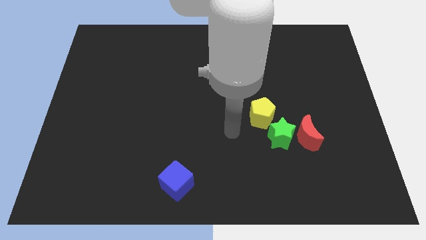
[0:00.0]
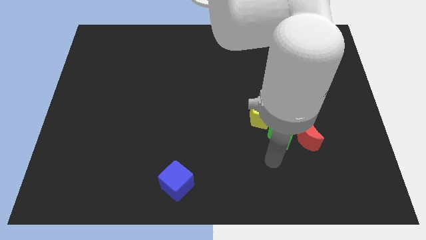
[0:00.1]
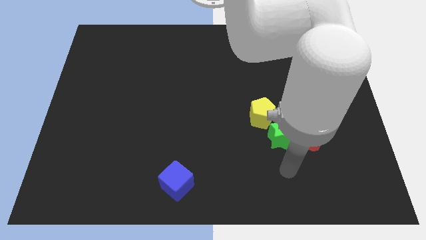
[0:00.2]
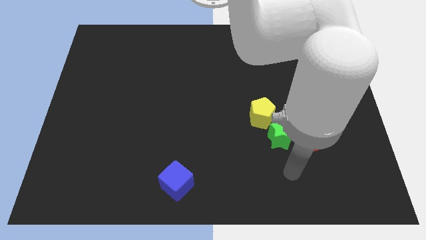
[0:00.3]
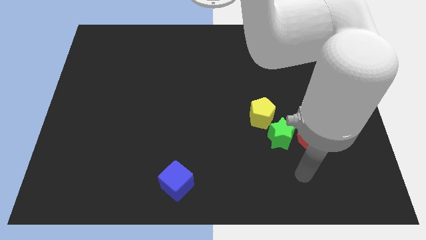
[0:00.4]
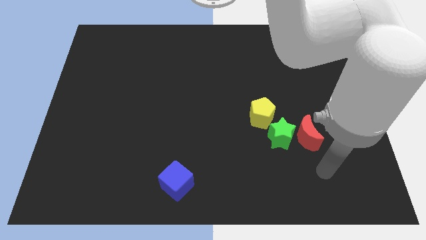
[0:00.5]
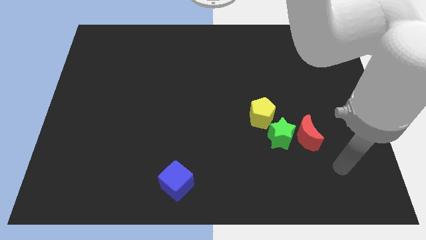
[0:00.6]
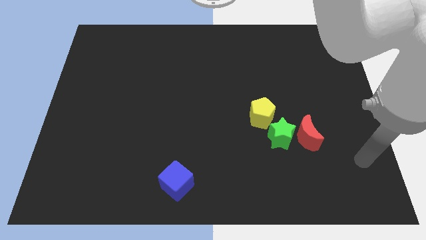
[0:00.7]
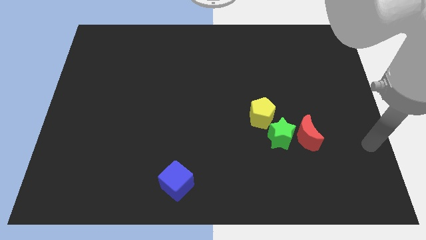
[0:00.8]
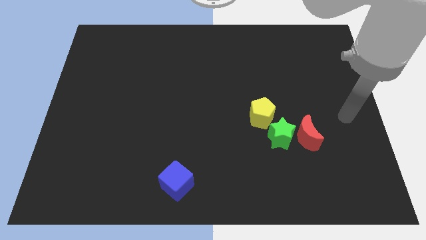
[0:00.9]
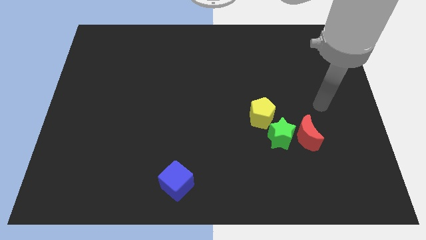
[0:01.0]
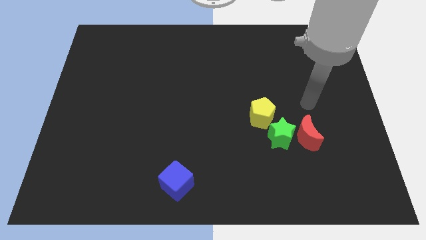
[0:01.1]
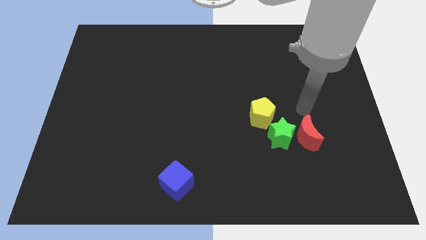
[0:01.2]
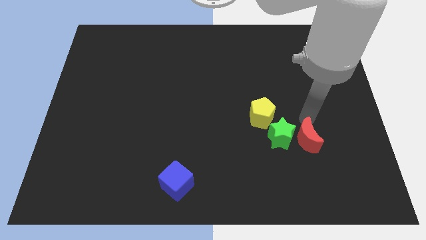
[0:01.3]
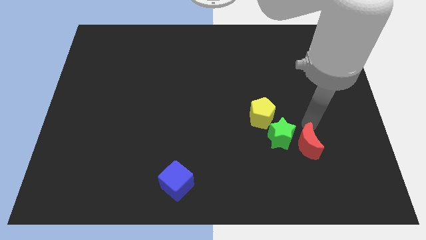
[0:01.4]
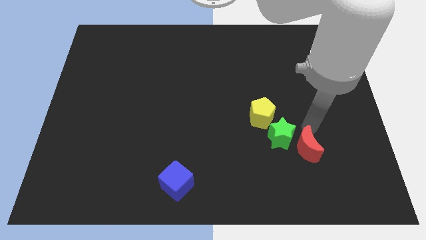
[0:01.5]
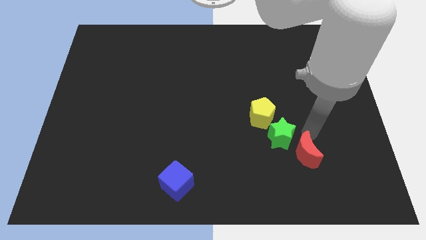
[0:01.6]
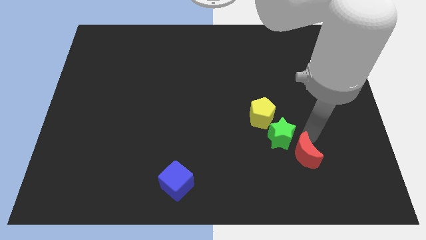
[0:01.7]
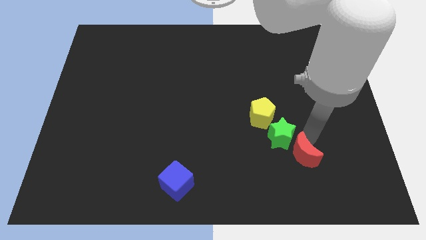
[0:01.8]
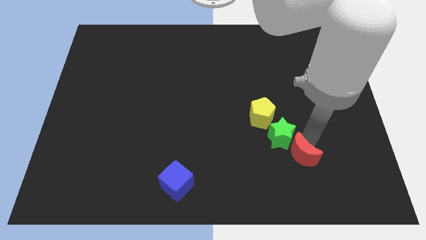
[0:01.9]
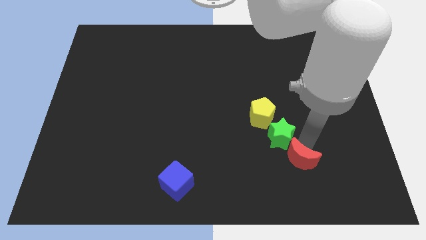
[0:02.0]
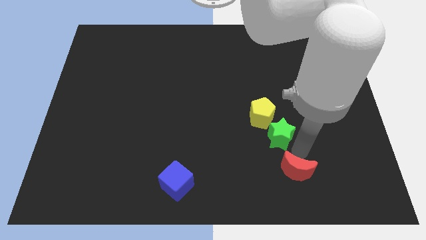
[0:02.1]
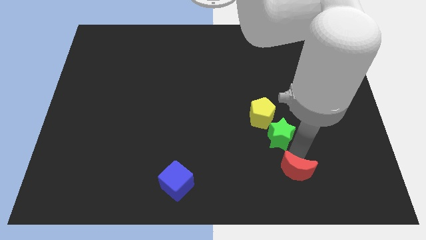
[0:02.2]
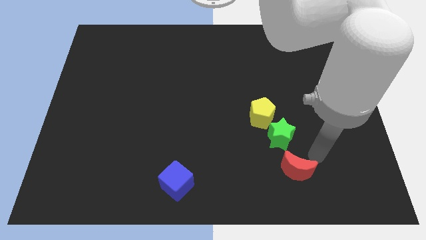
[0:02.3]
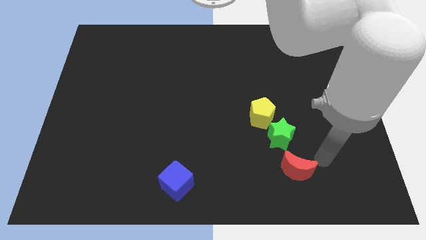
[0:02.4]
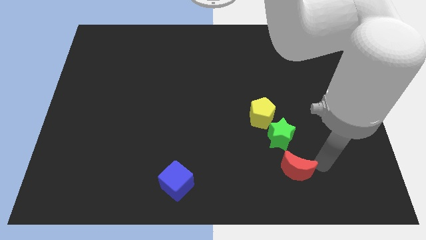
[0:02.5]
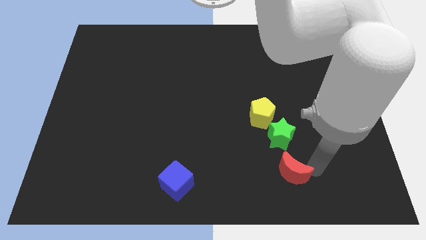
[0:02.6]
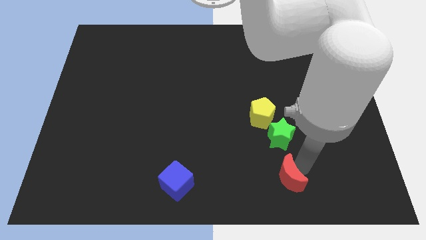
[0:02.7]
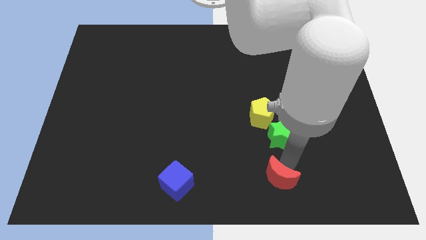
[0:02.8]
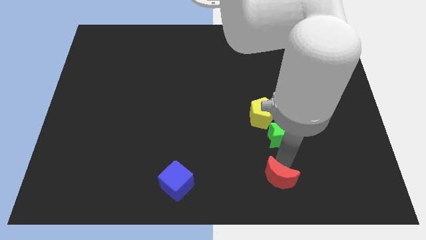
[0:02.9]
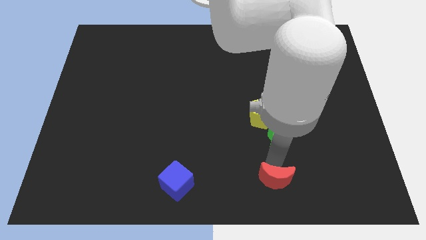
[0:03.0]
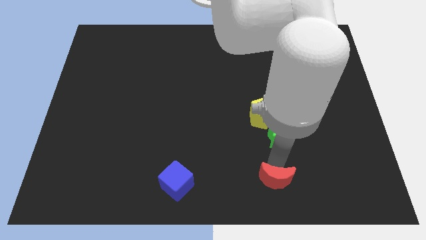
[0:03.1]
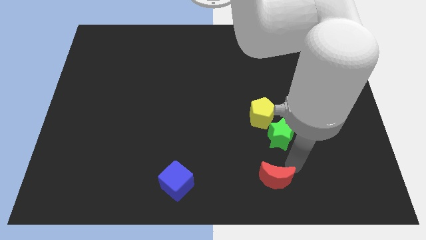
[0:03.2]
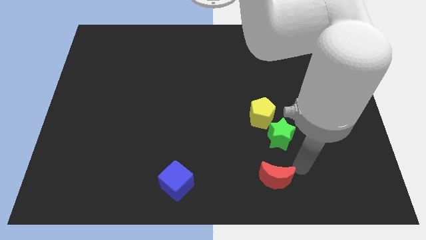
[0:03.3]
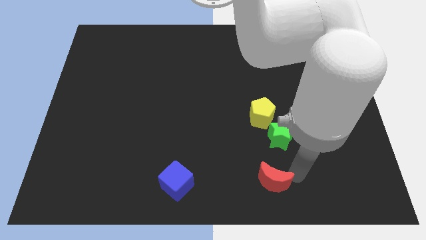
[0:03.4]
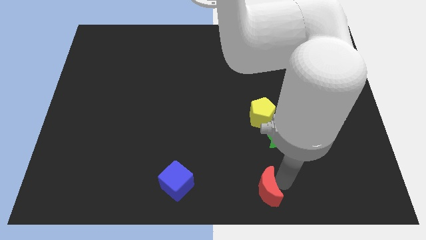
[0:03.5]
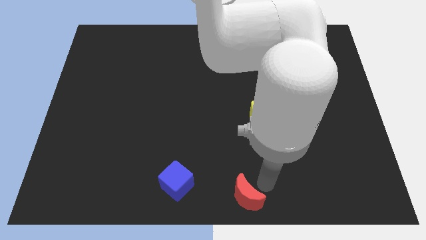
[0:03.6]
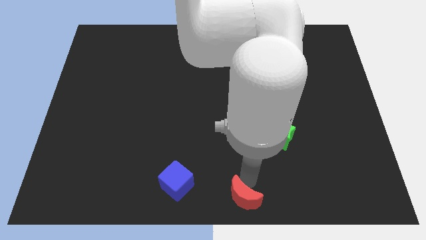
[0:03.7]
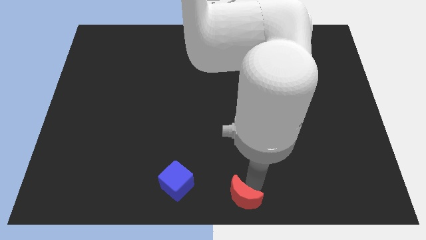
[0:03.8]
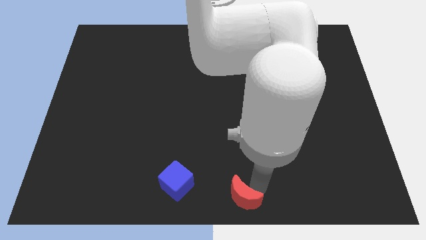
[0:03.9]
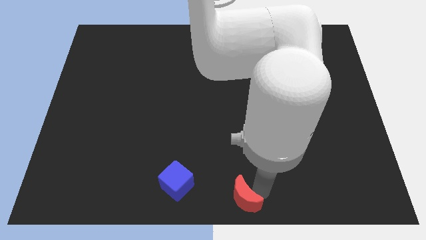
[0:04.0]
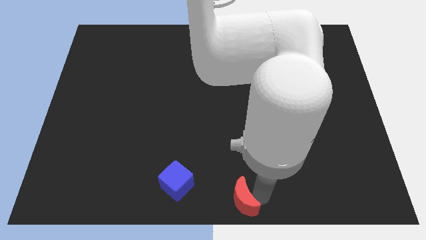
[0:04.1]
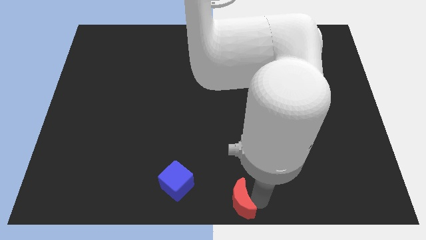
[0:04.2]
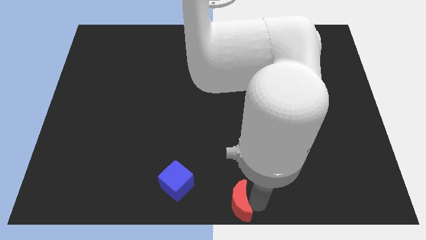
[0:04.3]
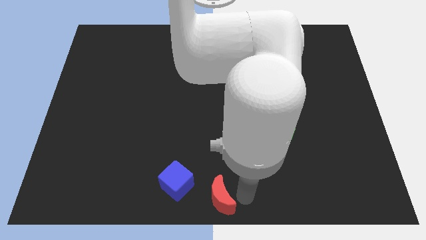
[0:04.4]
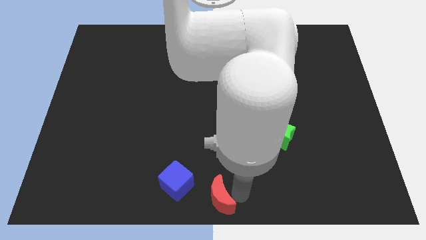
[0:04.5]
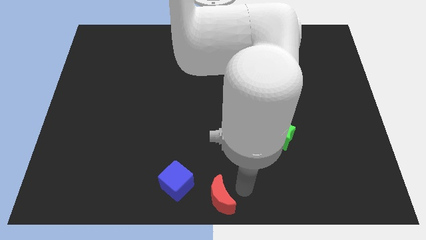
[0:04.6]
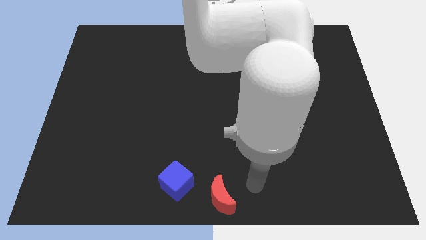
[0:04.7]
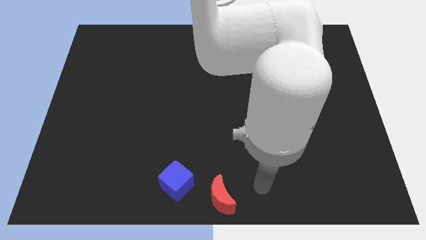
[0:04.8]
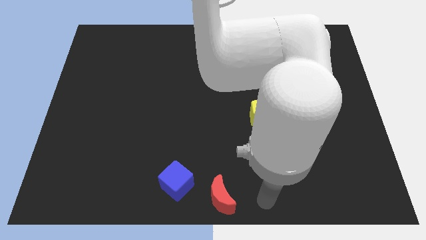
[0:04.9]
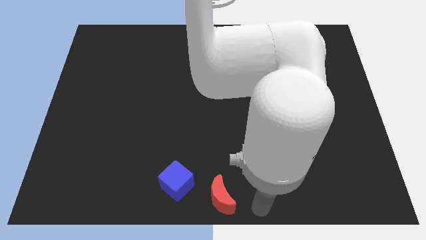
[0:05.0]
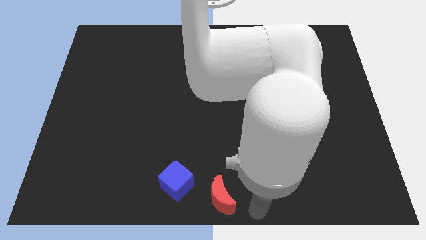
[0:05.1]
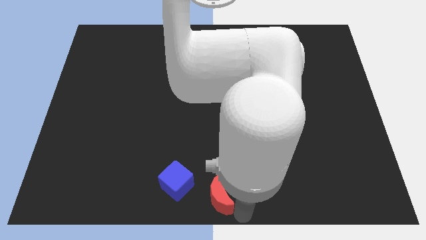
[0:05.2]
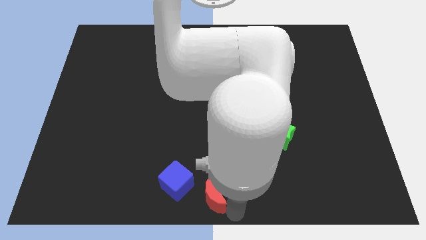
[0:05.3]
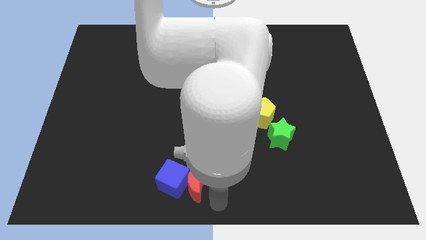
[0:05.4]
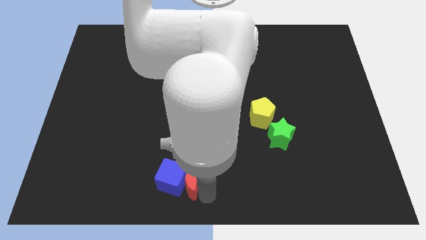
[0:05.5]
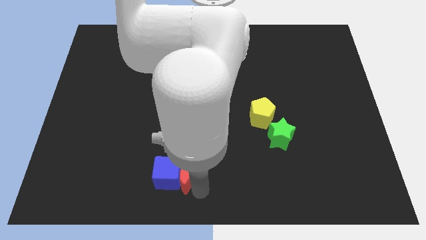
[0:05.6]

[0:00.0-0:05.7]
push the red moon to the blue cube

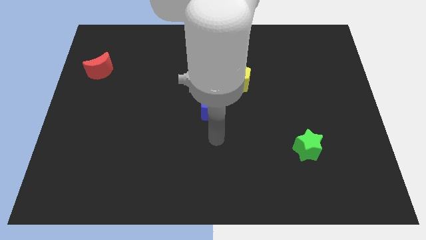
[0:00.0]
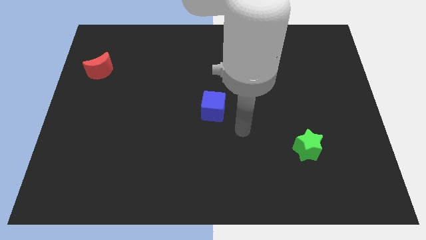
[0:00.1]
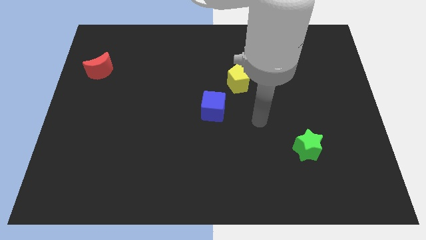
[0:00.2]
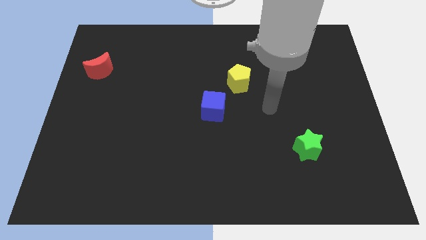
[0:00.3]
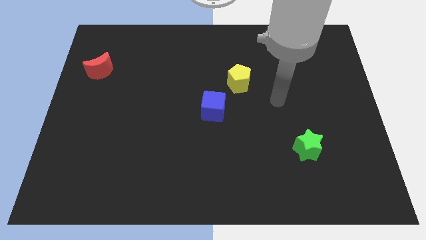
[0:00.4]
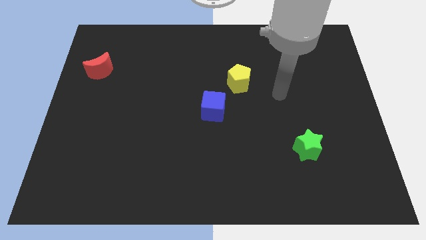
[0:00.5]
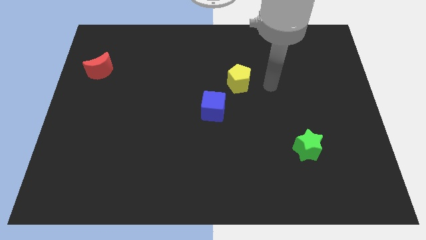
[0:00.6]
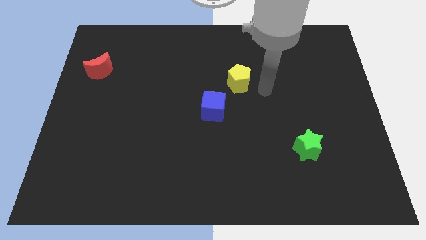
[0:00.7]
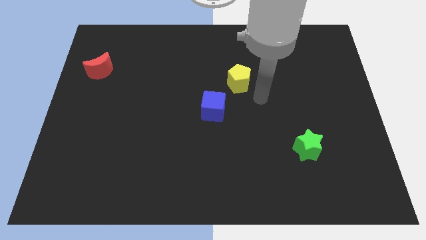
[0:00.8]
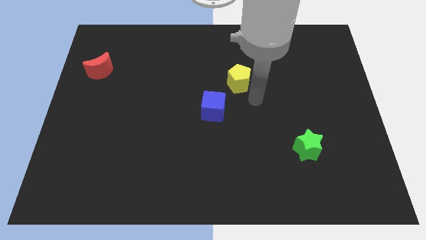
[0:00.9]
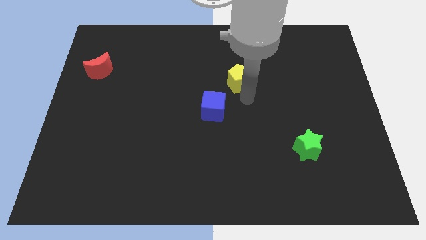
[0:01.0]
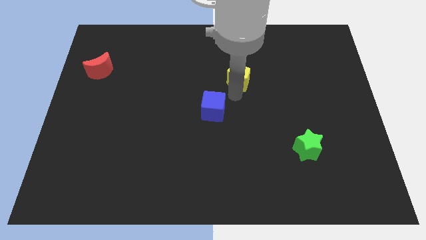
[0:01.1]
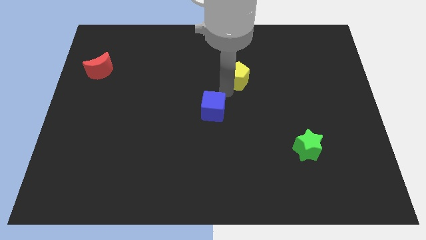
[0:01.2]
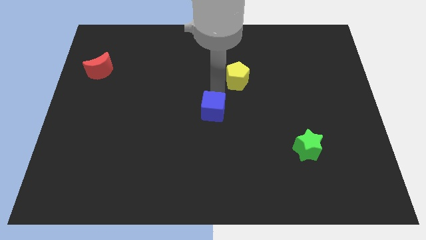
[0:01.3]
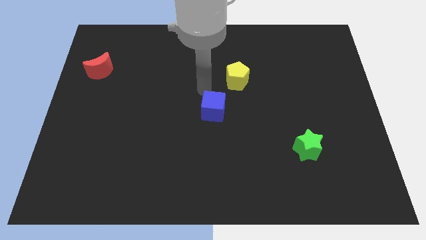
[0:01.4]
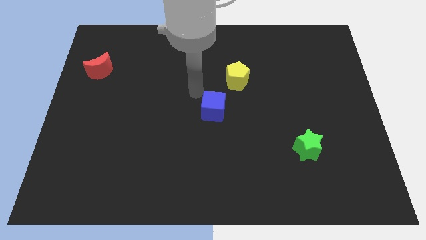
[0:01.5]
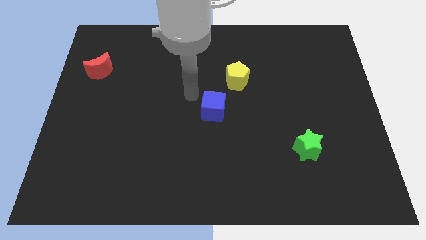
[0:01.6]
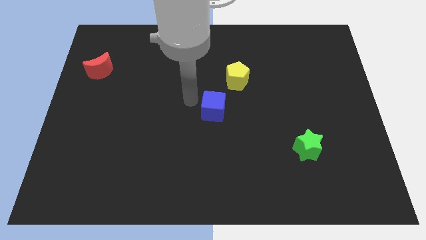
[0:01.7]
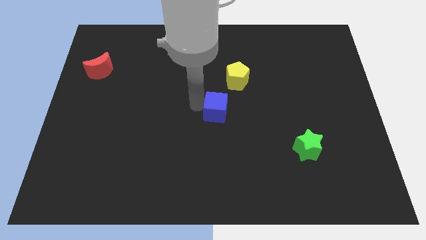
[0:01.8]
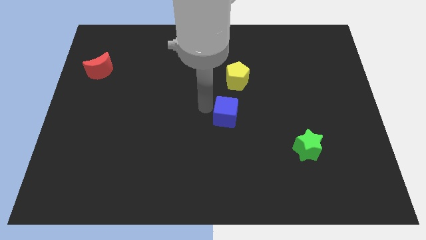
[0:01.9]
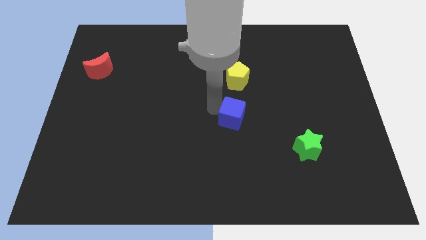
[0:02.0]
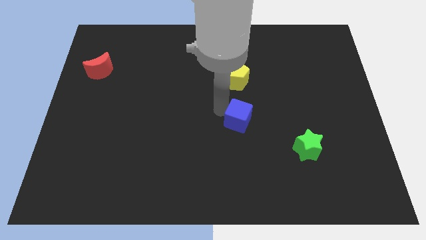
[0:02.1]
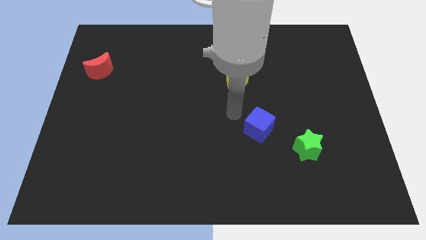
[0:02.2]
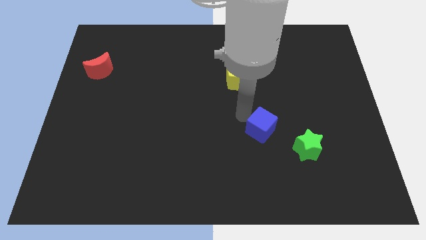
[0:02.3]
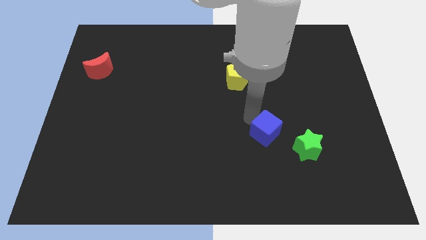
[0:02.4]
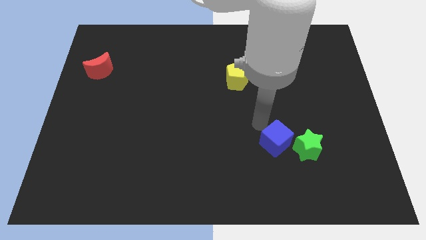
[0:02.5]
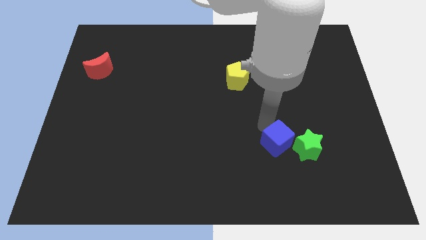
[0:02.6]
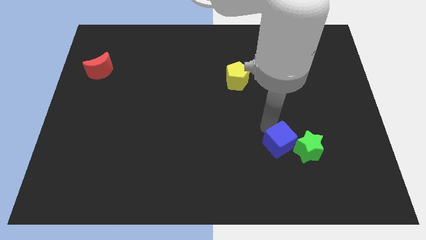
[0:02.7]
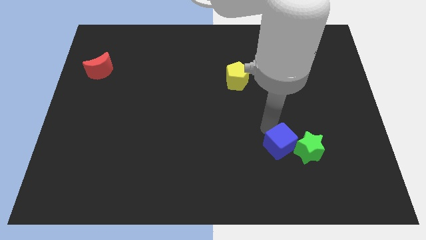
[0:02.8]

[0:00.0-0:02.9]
slide the blue cube close to the green block
